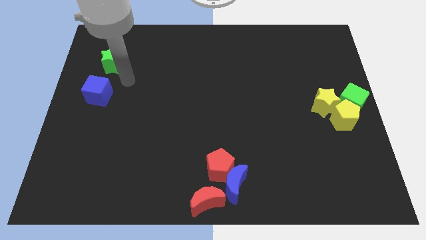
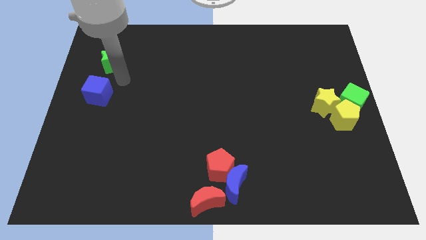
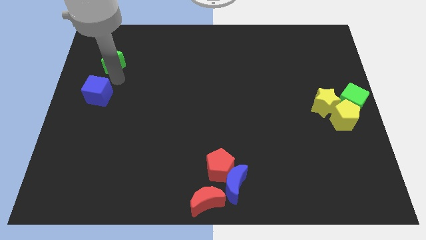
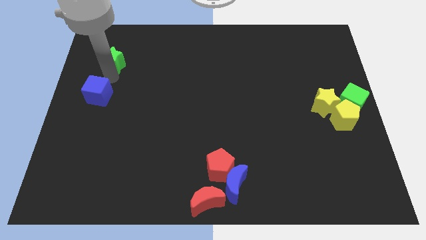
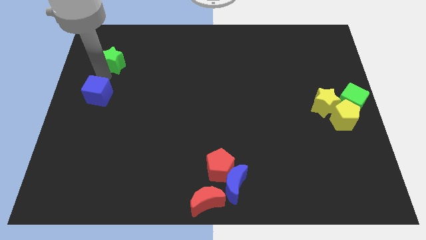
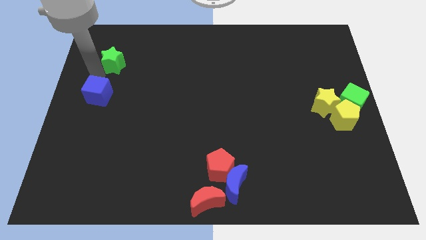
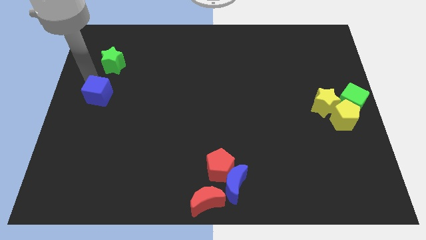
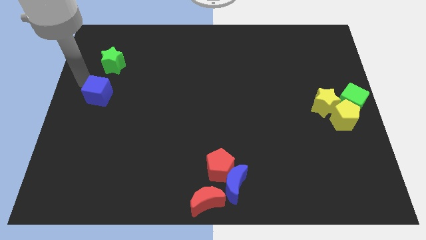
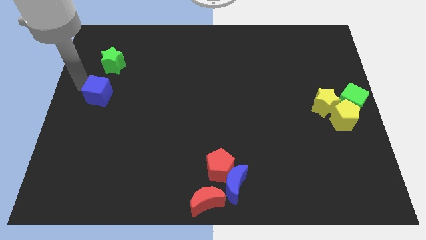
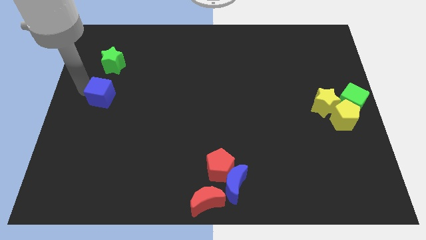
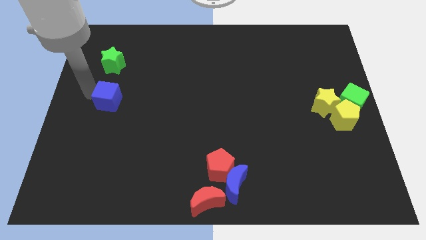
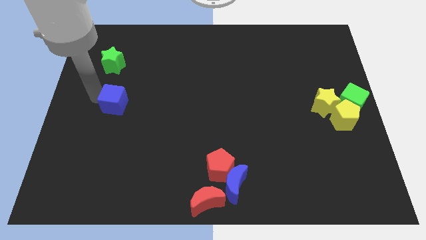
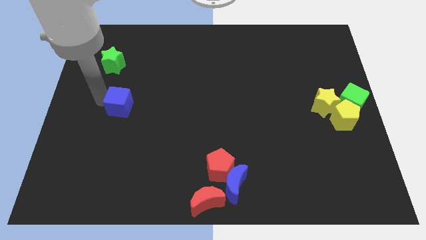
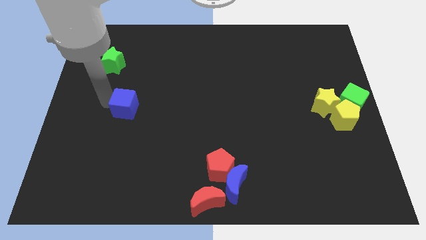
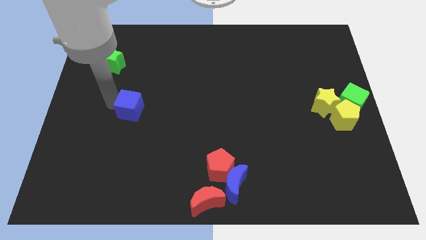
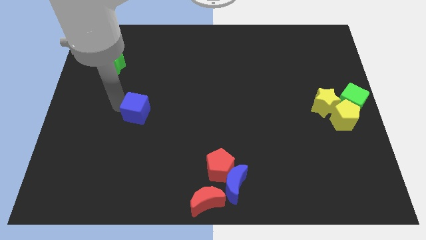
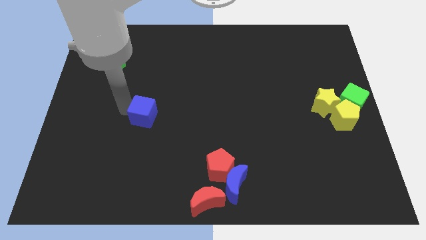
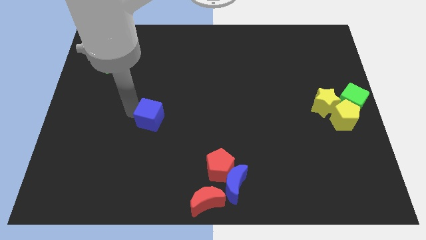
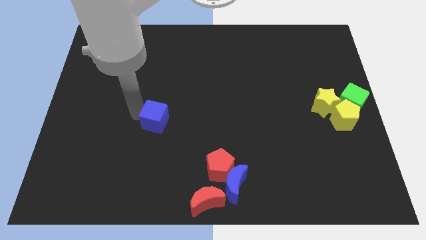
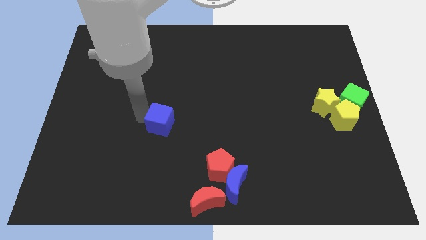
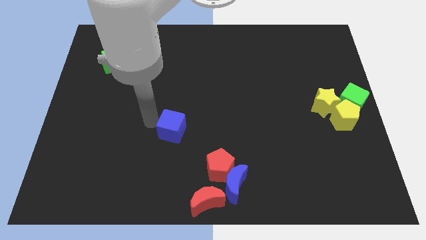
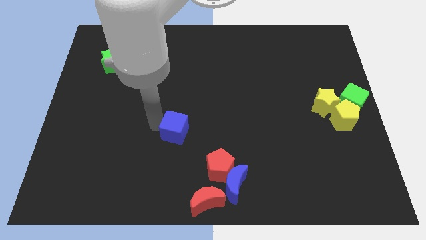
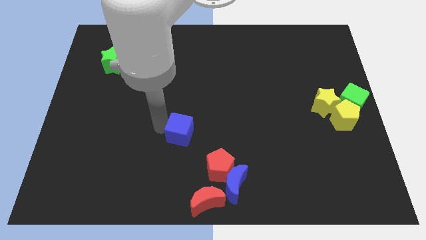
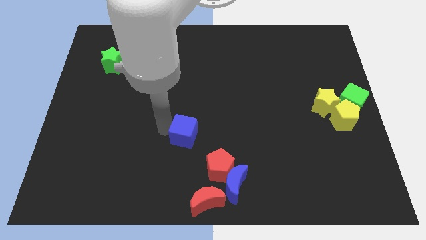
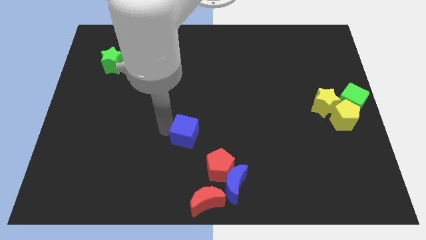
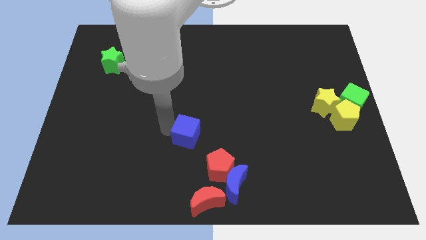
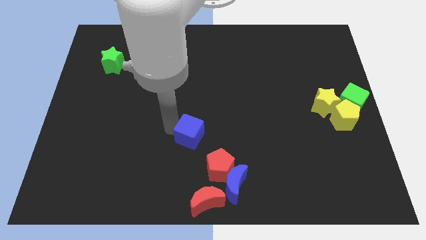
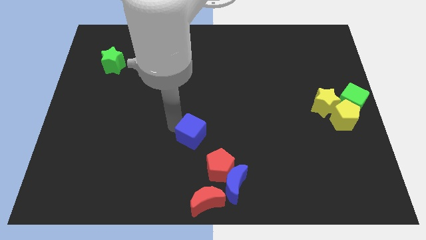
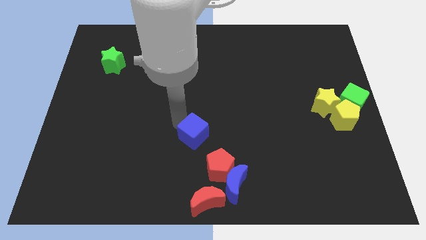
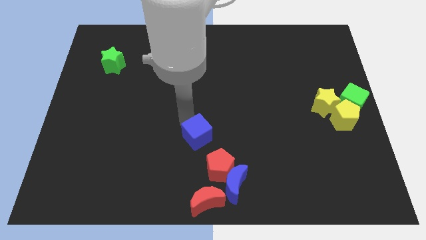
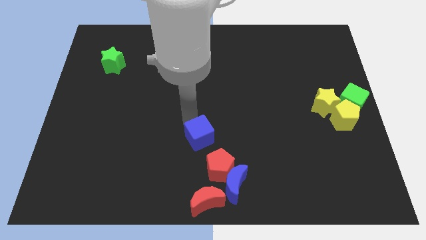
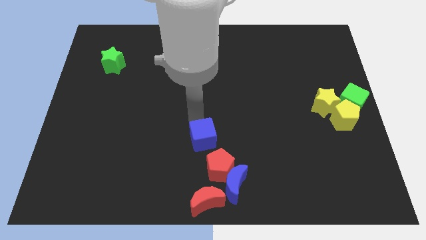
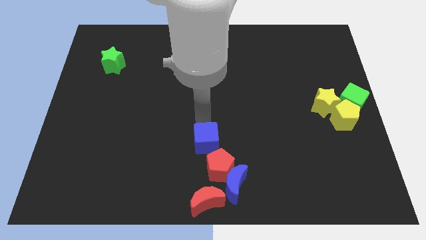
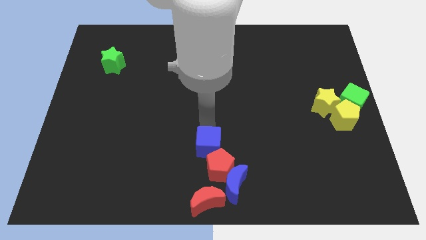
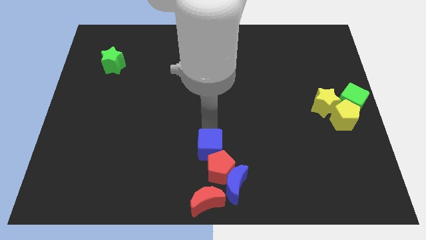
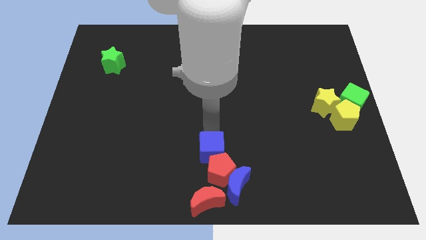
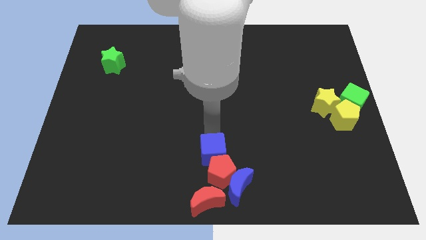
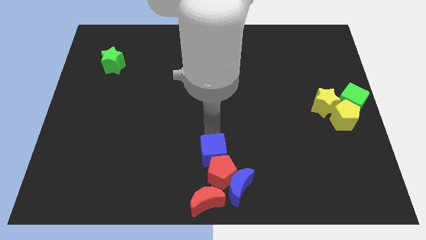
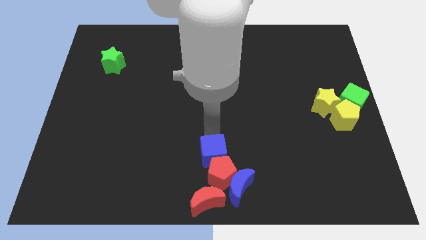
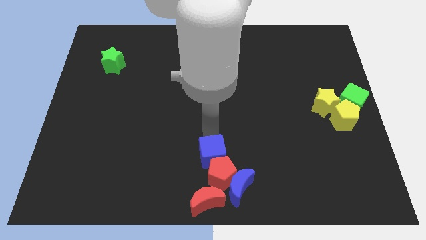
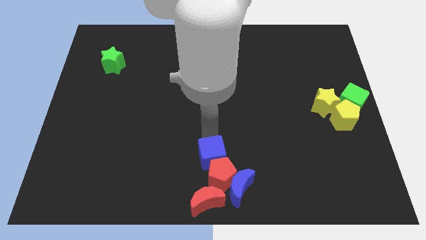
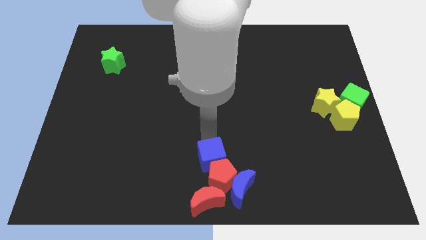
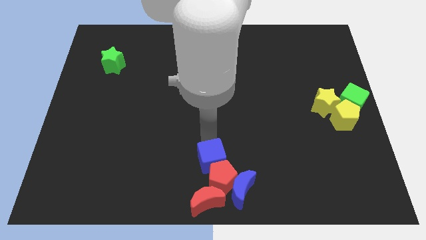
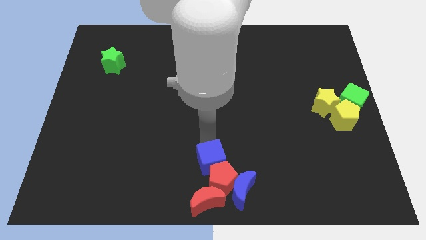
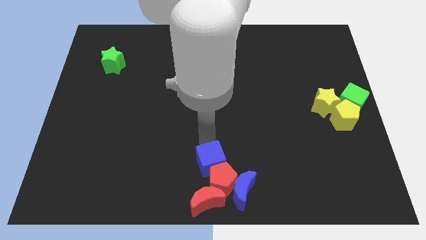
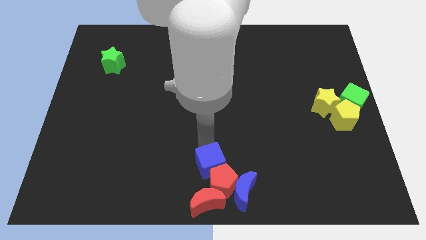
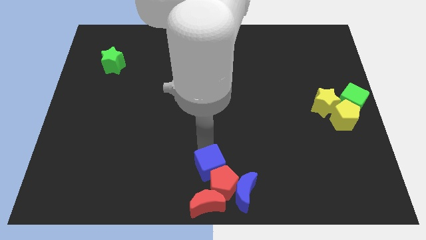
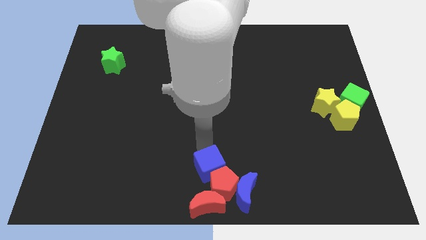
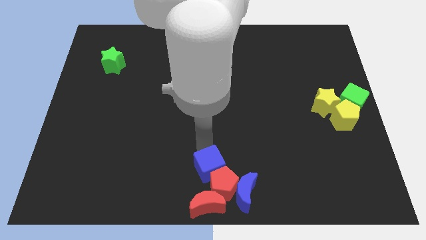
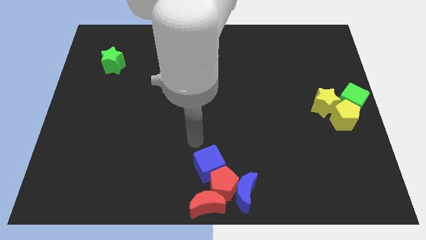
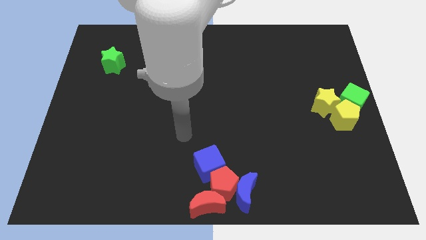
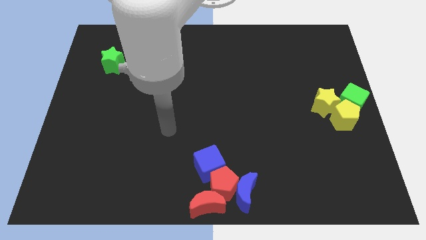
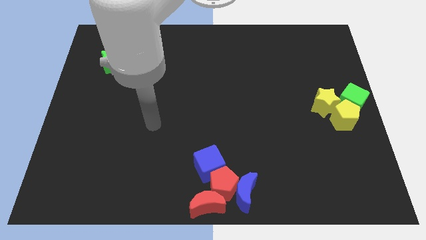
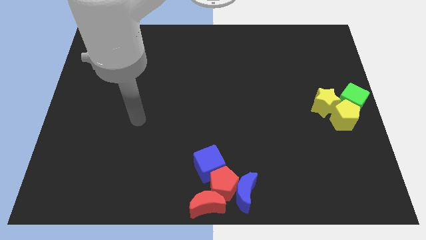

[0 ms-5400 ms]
move the blue cube towards the red pentagon

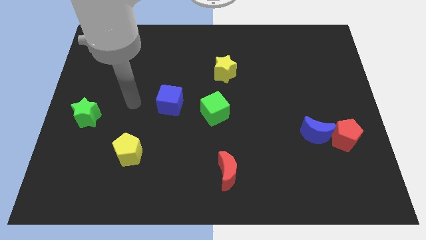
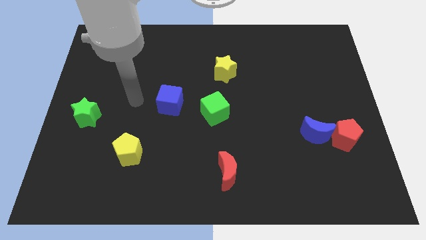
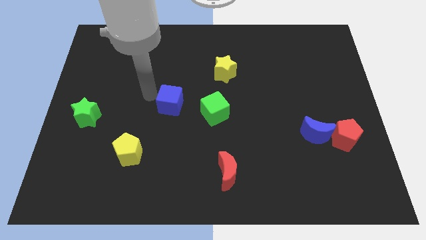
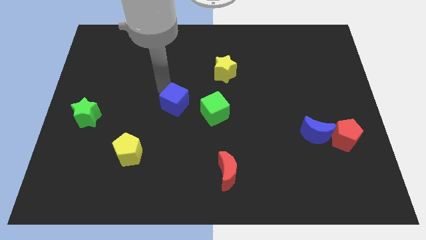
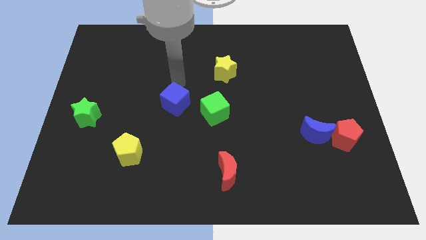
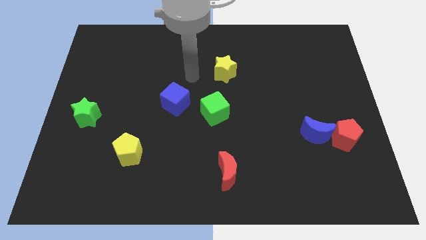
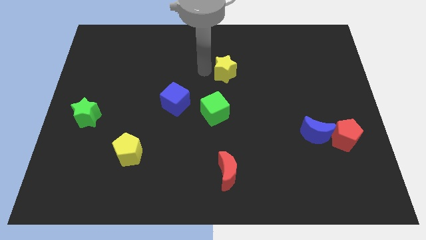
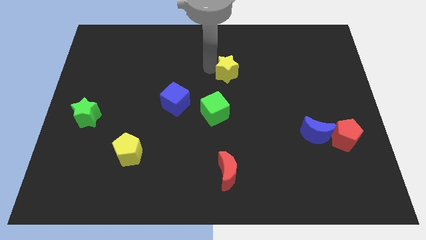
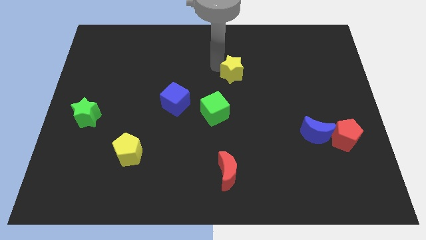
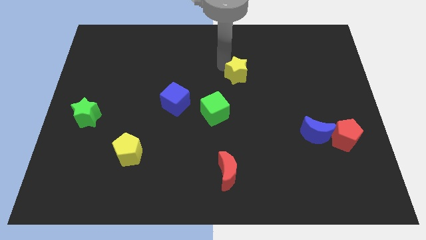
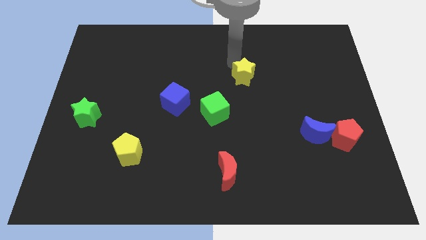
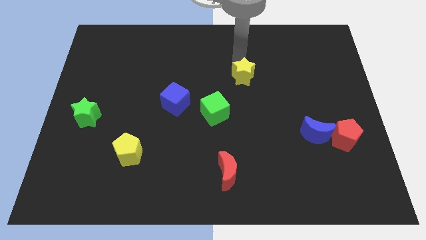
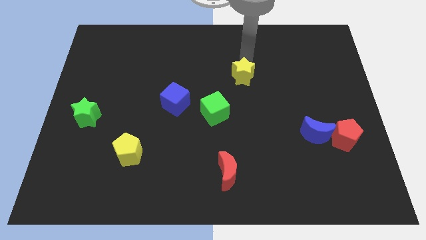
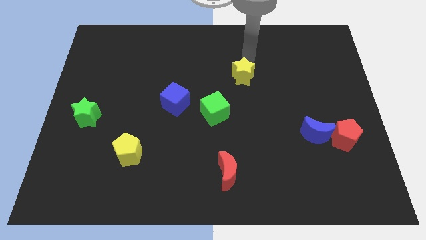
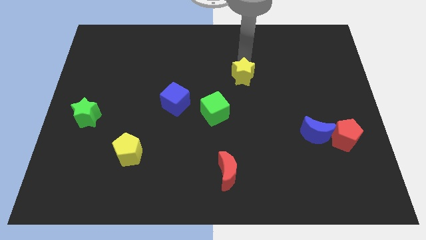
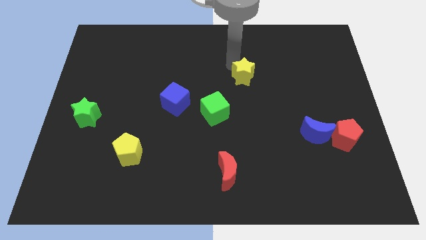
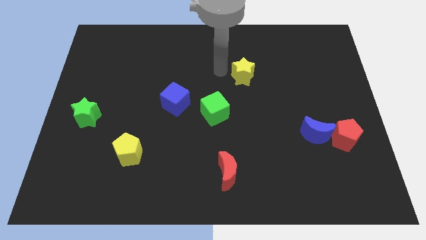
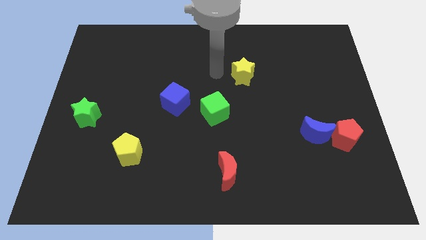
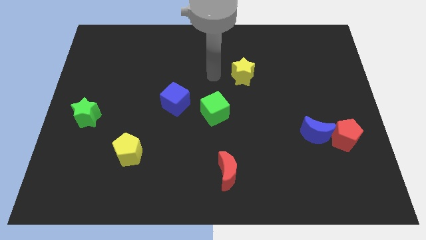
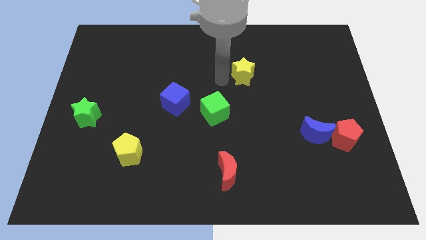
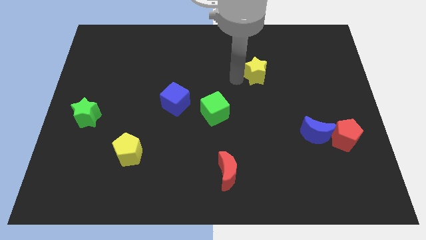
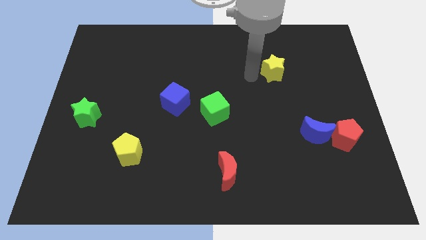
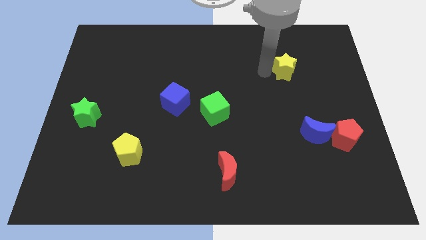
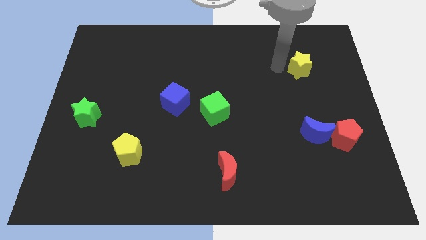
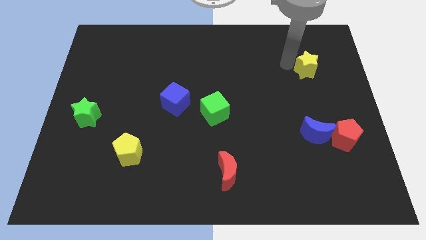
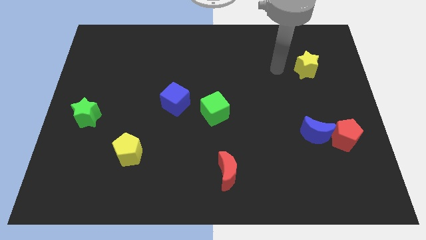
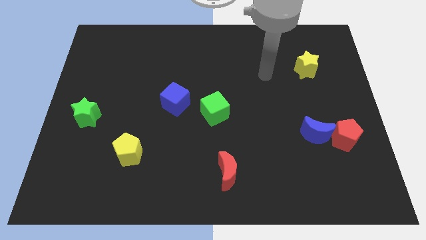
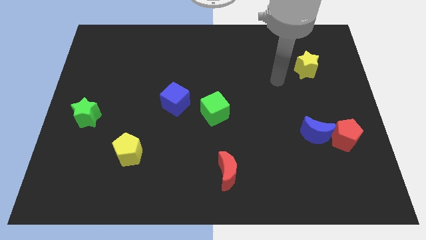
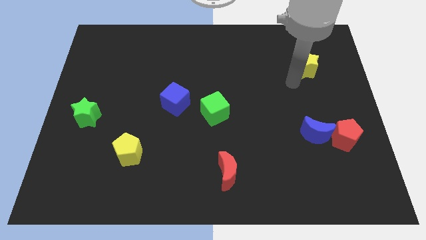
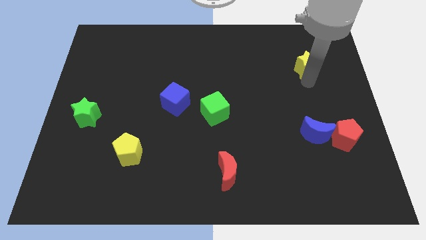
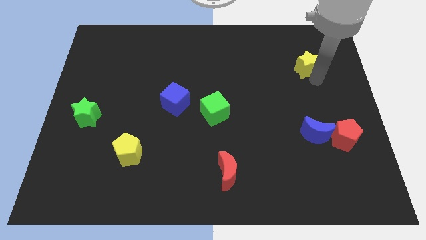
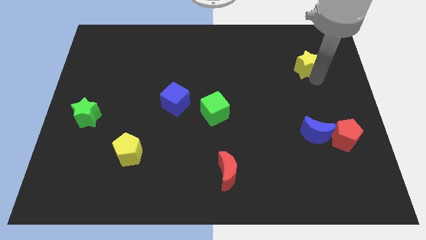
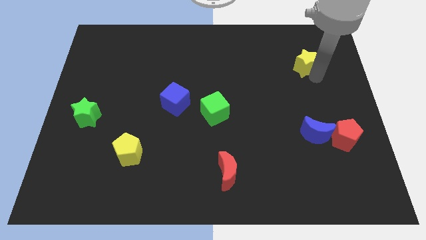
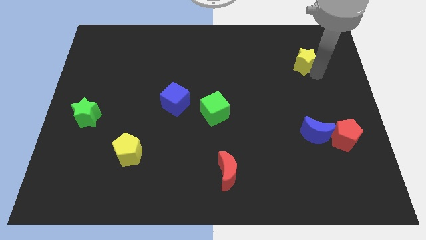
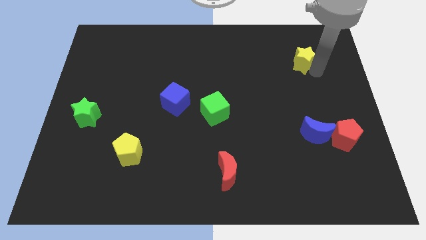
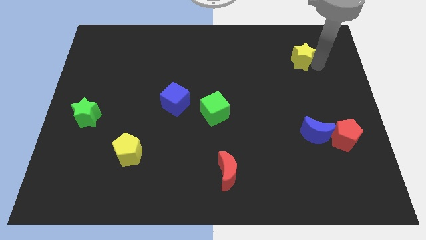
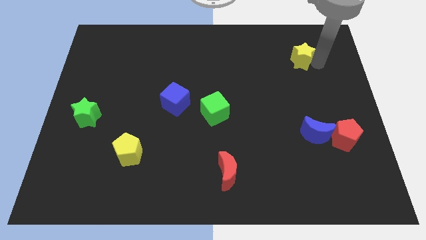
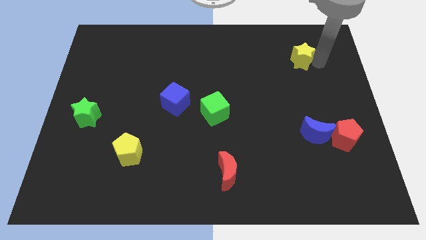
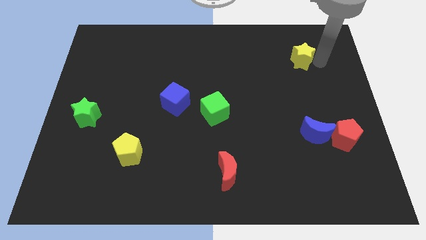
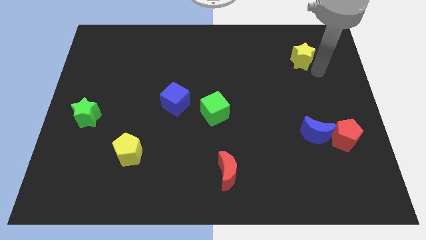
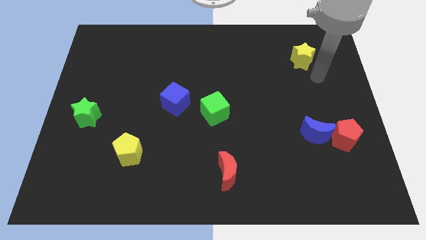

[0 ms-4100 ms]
slide yellow star towards top right
